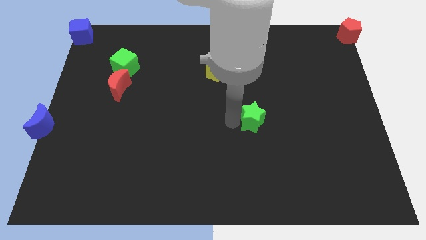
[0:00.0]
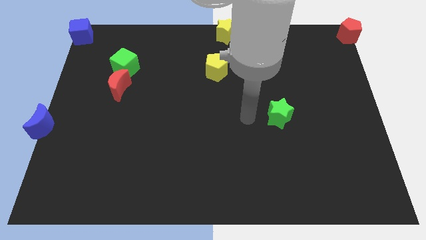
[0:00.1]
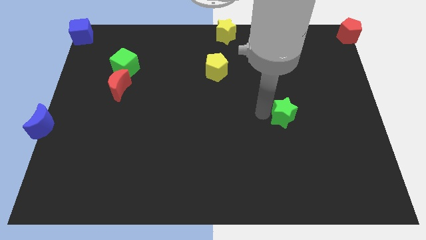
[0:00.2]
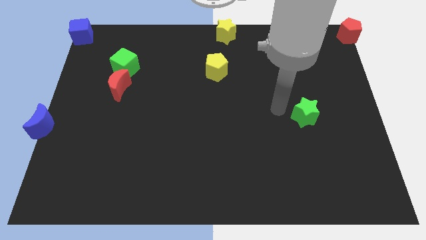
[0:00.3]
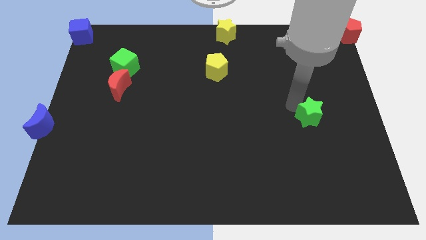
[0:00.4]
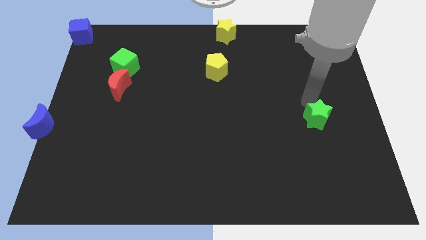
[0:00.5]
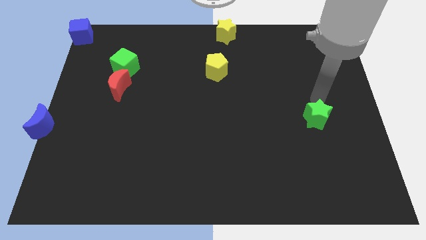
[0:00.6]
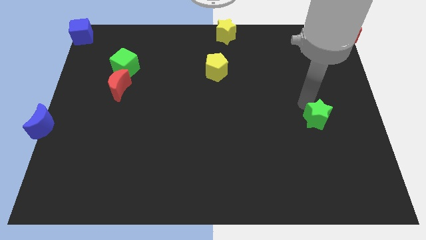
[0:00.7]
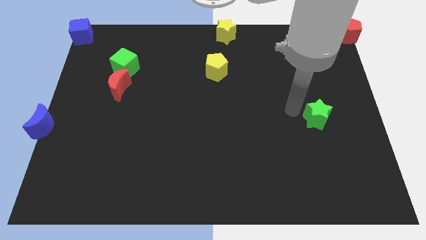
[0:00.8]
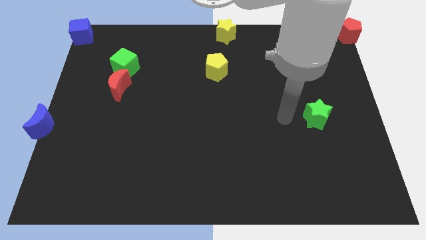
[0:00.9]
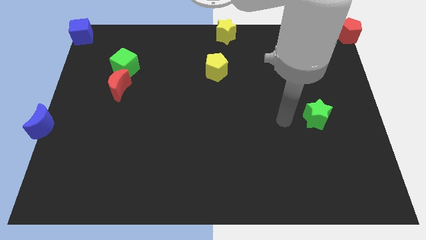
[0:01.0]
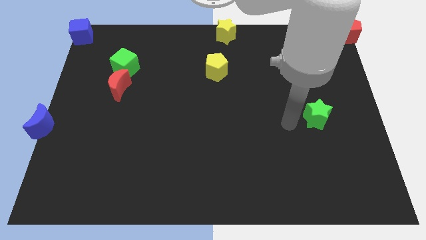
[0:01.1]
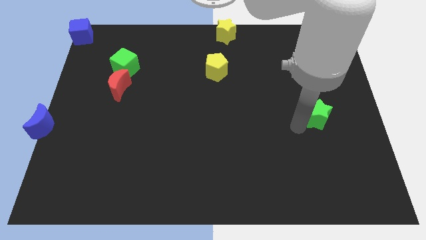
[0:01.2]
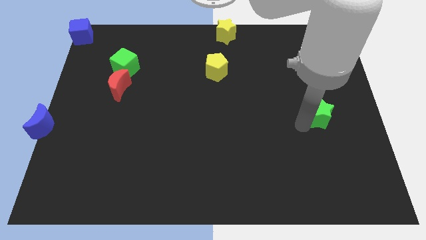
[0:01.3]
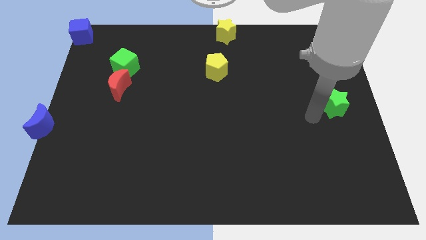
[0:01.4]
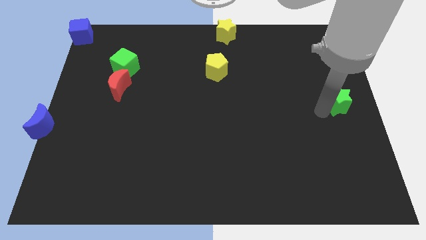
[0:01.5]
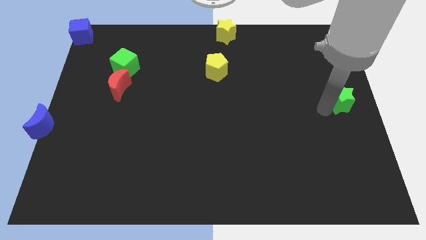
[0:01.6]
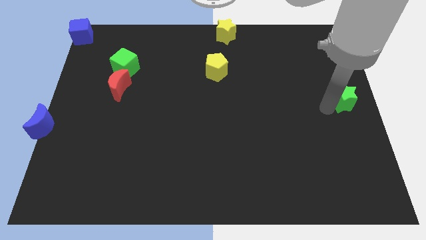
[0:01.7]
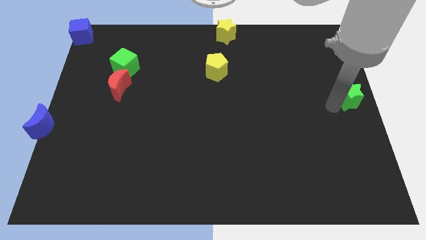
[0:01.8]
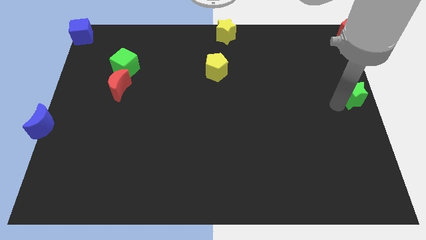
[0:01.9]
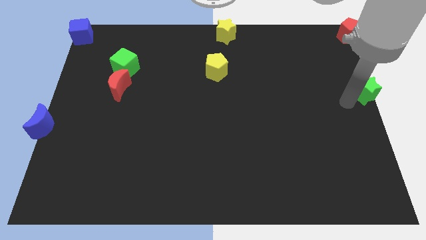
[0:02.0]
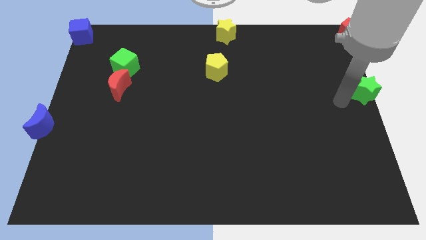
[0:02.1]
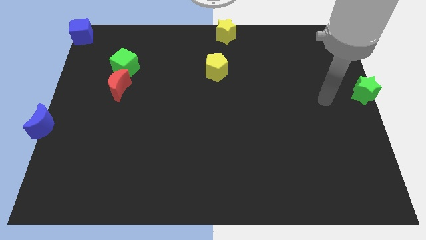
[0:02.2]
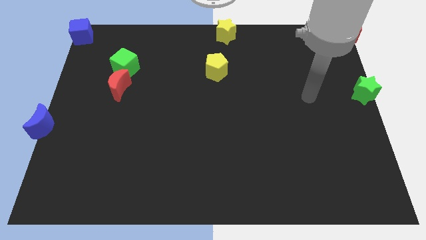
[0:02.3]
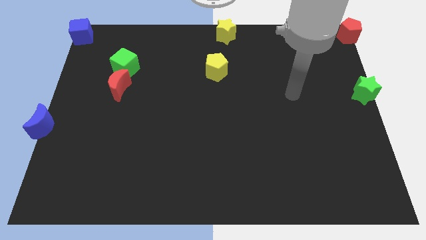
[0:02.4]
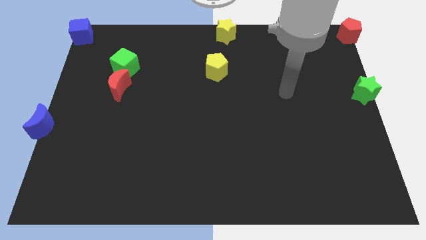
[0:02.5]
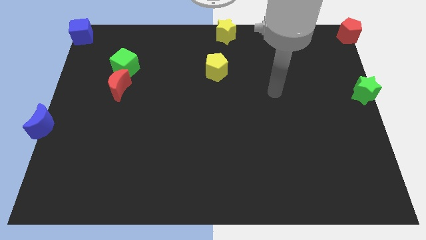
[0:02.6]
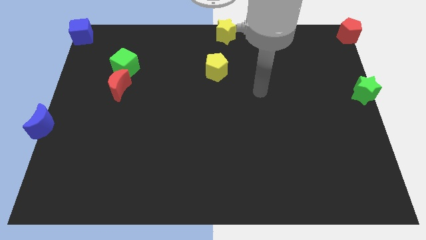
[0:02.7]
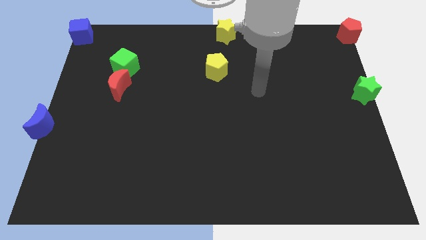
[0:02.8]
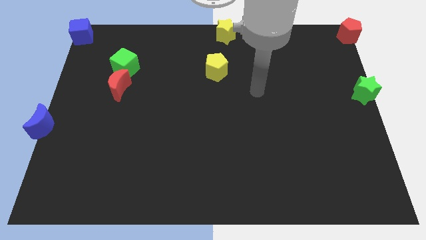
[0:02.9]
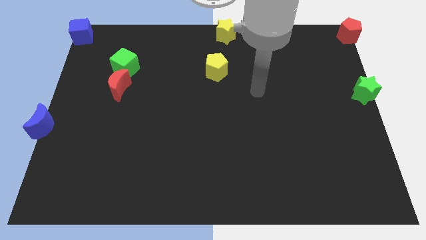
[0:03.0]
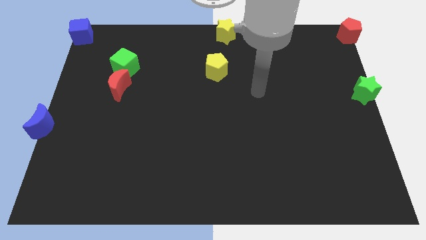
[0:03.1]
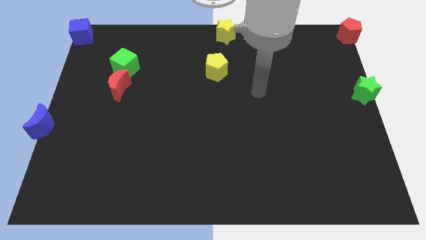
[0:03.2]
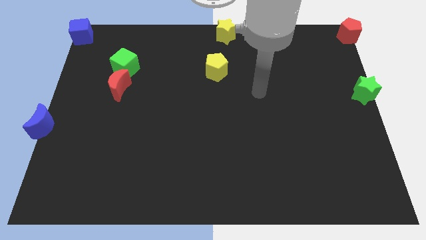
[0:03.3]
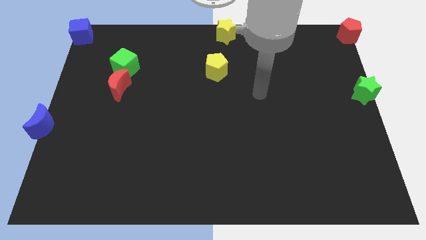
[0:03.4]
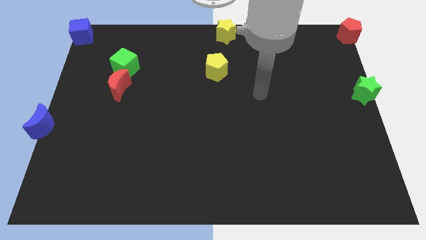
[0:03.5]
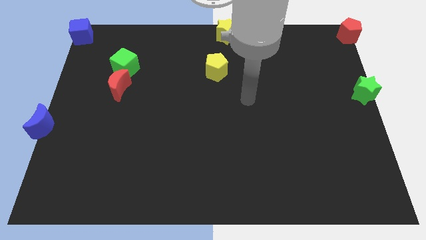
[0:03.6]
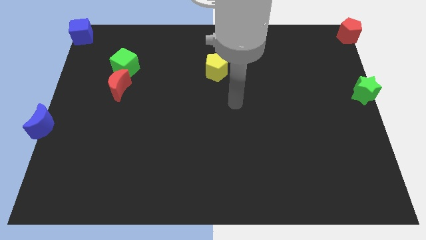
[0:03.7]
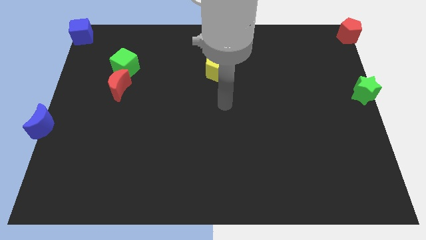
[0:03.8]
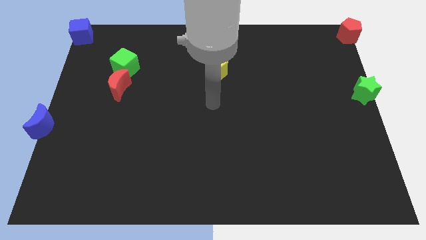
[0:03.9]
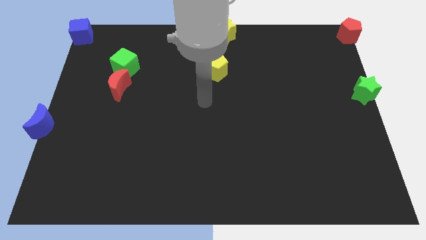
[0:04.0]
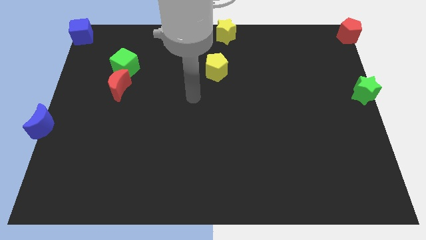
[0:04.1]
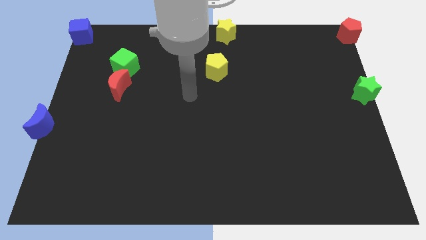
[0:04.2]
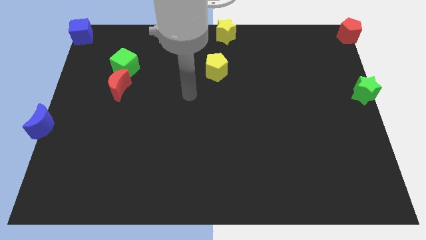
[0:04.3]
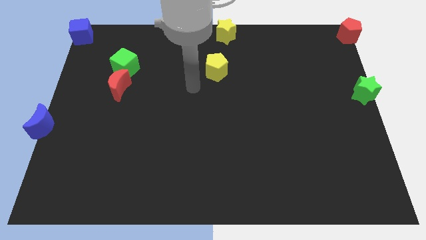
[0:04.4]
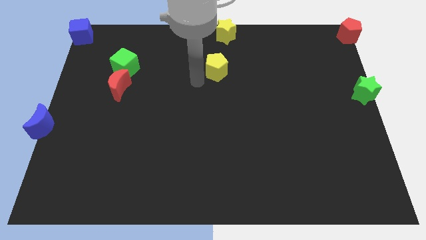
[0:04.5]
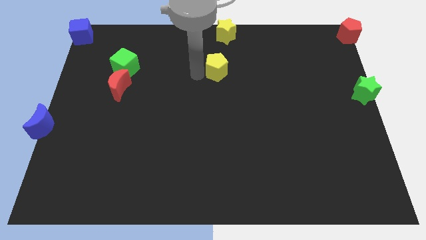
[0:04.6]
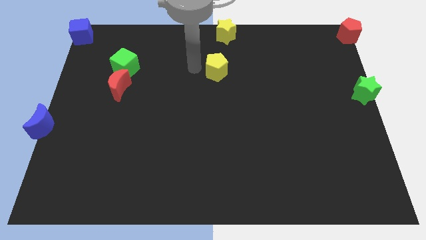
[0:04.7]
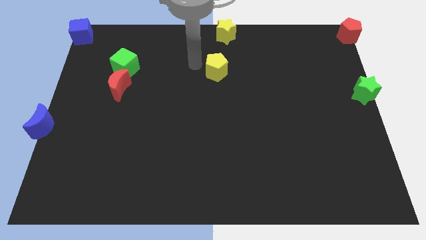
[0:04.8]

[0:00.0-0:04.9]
put the green star vertically below the red pentagon

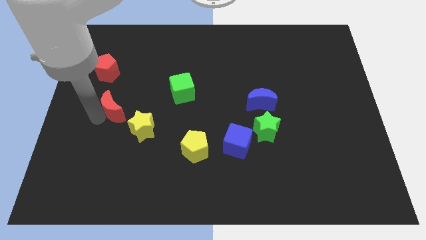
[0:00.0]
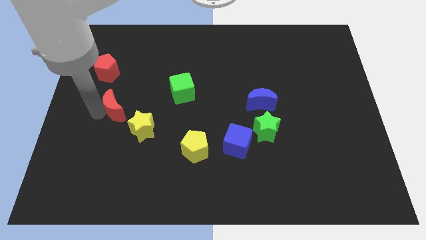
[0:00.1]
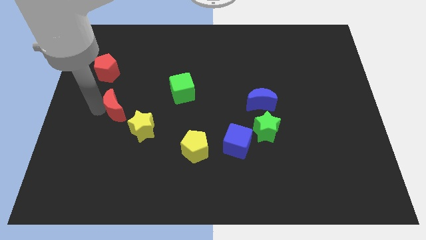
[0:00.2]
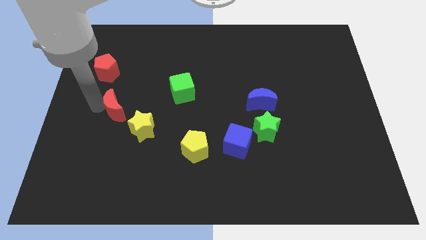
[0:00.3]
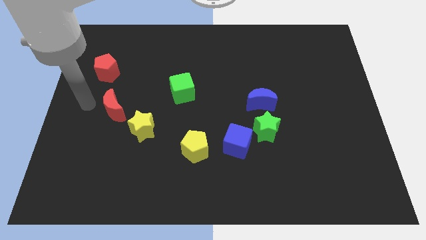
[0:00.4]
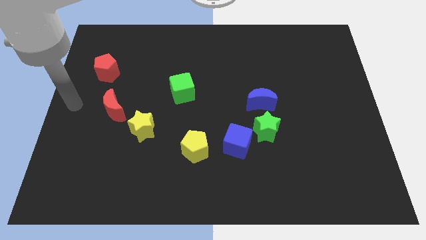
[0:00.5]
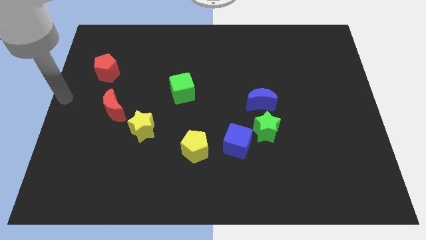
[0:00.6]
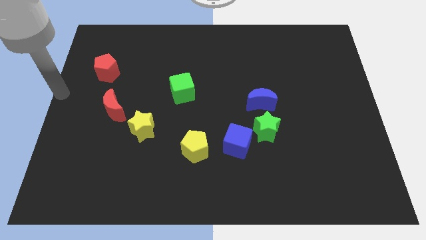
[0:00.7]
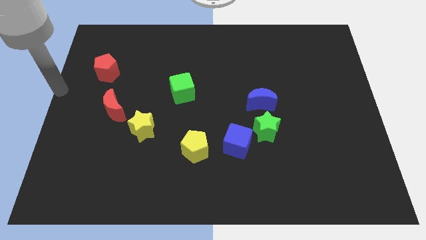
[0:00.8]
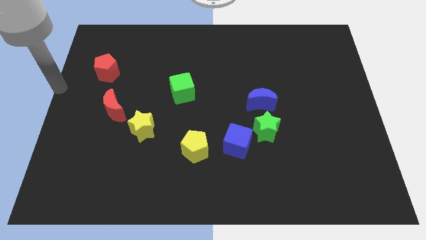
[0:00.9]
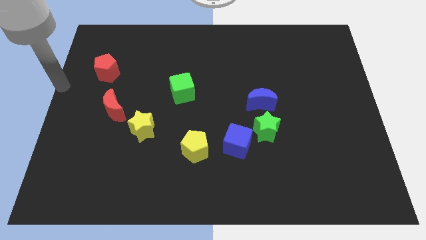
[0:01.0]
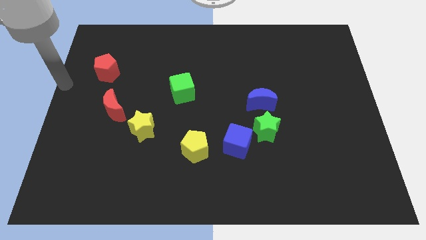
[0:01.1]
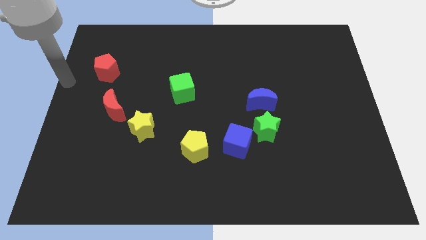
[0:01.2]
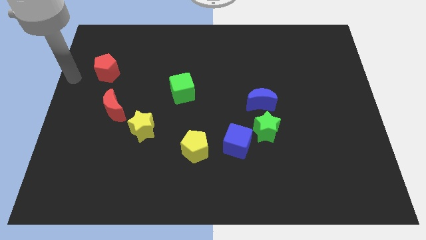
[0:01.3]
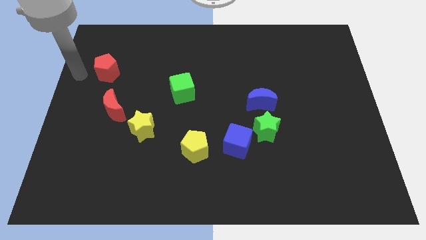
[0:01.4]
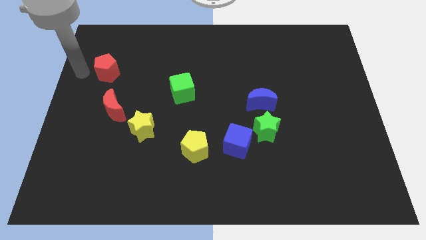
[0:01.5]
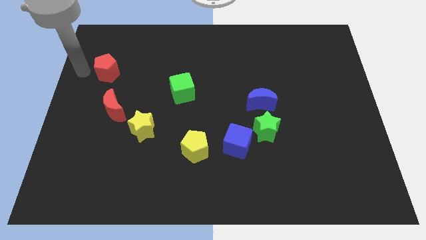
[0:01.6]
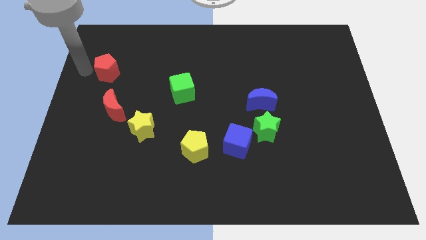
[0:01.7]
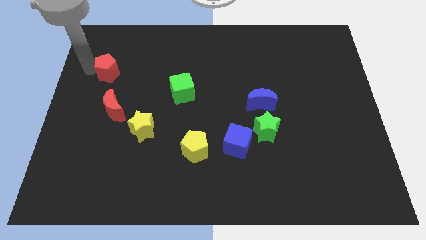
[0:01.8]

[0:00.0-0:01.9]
push the arm towards the red pentagon

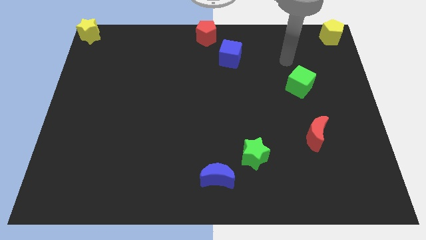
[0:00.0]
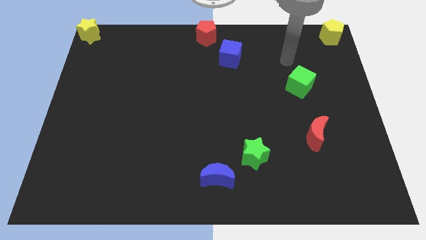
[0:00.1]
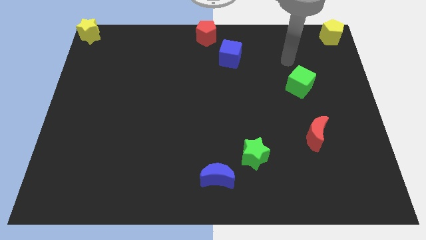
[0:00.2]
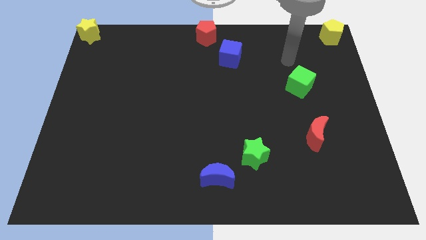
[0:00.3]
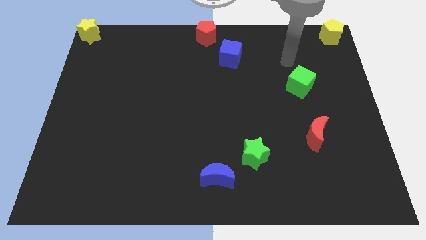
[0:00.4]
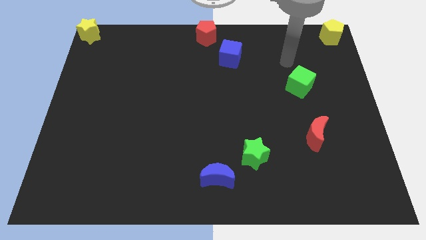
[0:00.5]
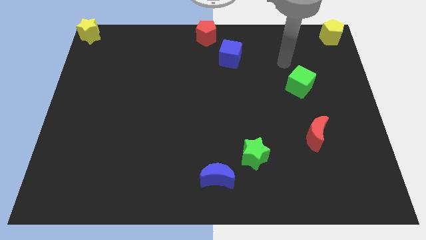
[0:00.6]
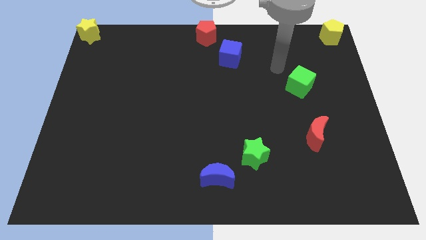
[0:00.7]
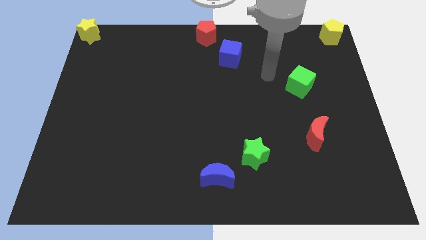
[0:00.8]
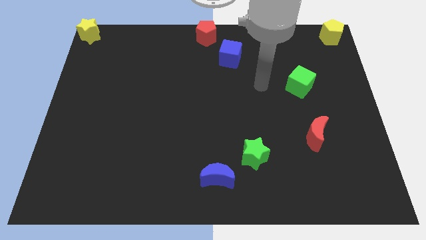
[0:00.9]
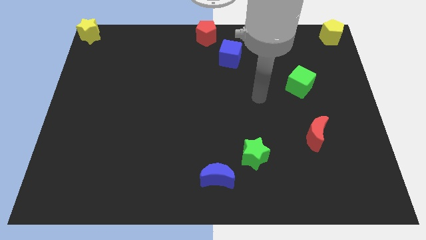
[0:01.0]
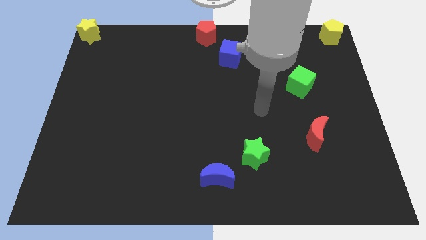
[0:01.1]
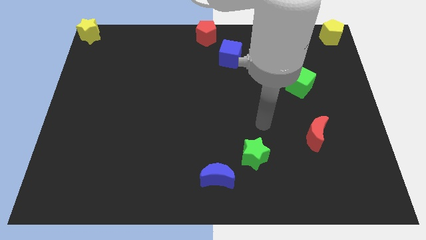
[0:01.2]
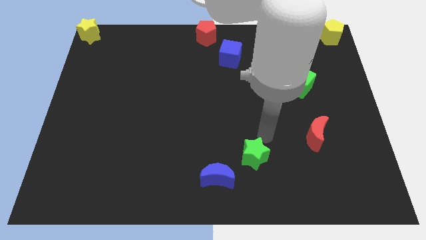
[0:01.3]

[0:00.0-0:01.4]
place your arm at the top right side of green star

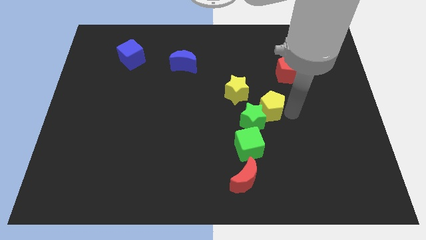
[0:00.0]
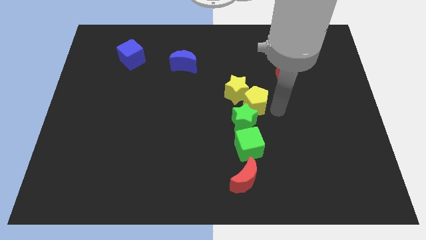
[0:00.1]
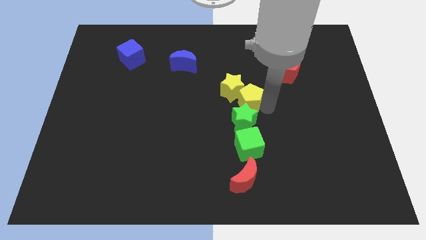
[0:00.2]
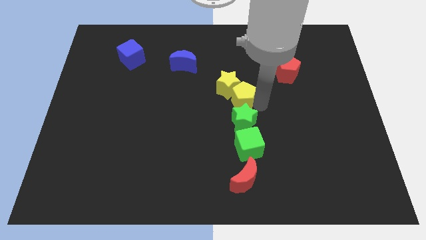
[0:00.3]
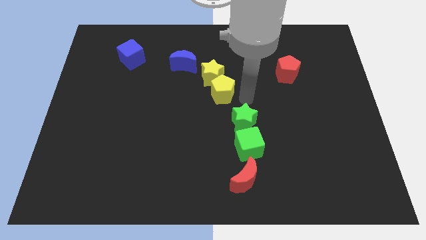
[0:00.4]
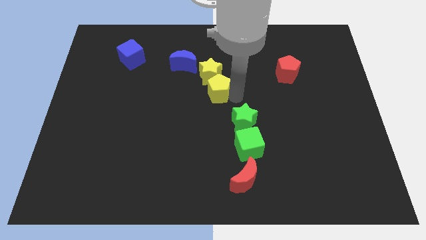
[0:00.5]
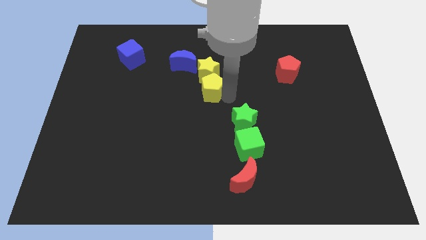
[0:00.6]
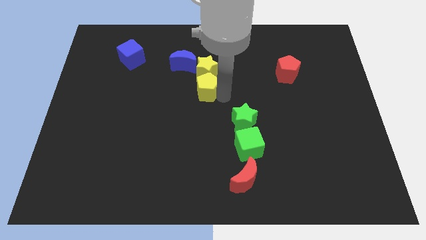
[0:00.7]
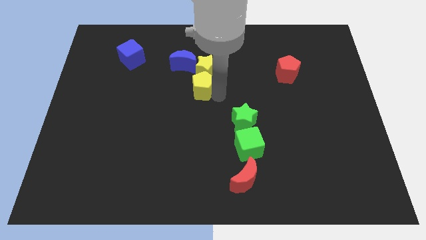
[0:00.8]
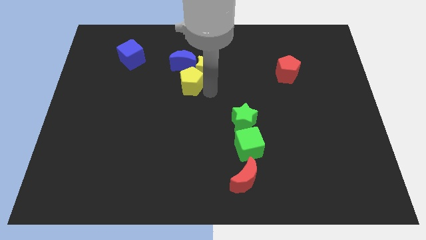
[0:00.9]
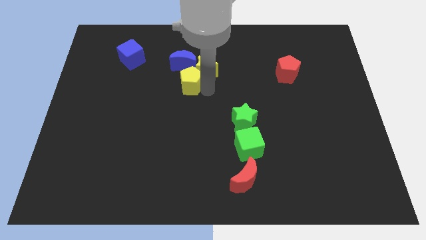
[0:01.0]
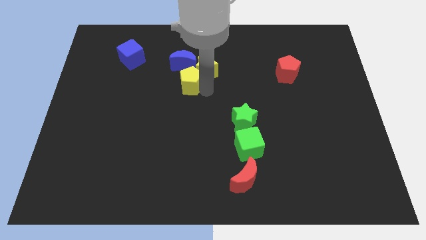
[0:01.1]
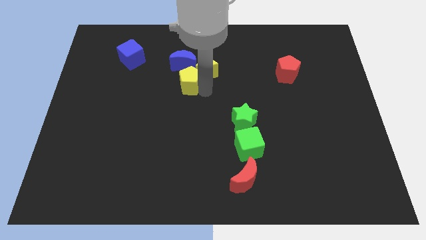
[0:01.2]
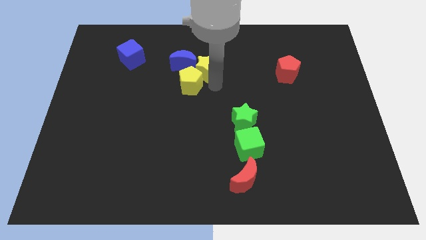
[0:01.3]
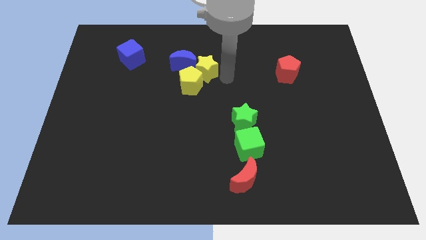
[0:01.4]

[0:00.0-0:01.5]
push the yellow pentagon into the yellow star
